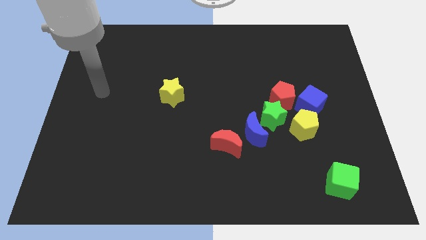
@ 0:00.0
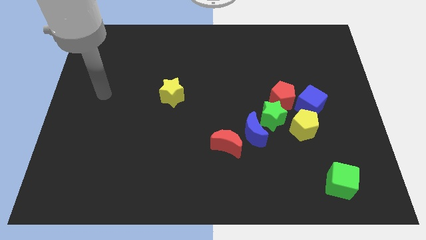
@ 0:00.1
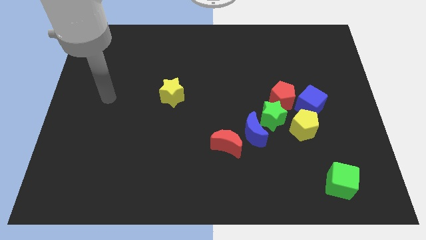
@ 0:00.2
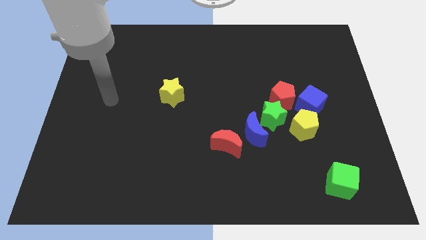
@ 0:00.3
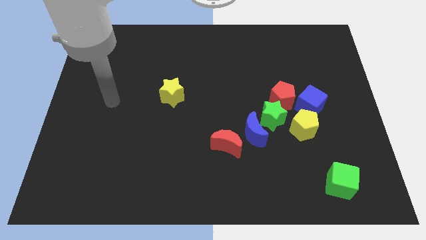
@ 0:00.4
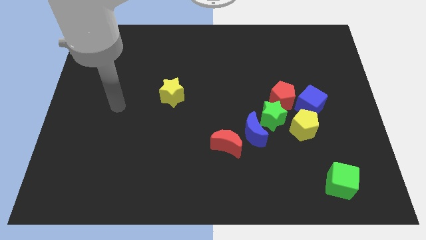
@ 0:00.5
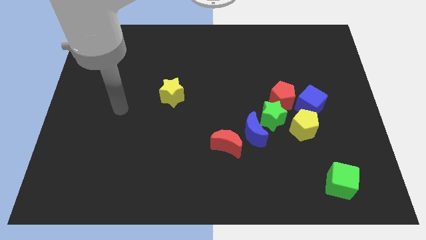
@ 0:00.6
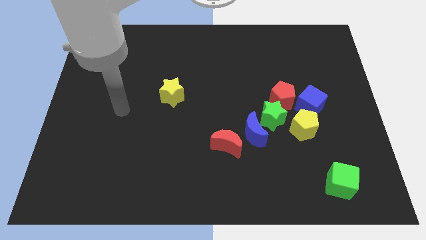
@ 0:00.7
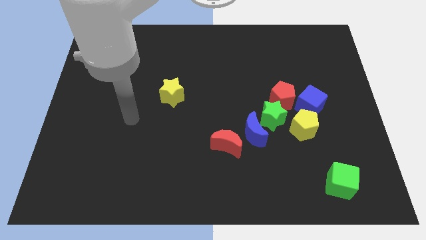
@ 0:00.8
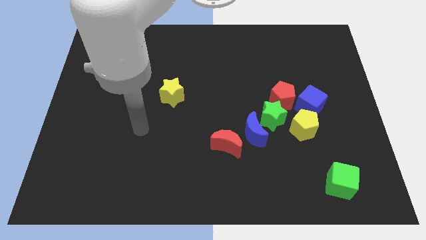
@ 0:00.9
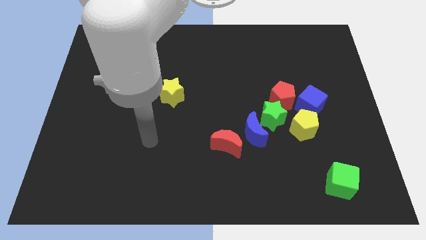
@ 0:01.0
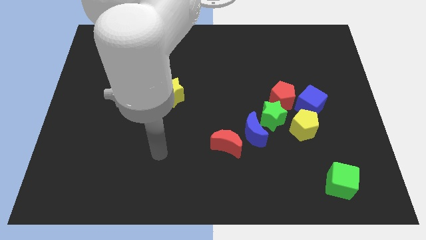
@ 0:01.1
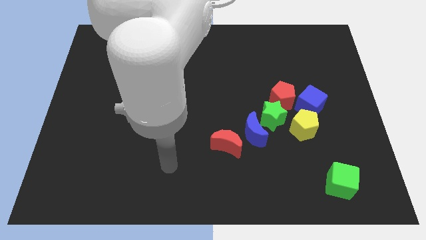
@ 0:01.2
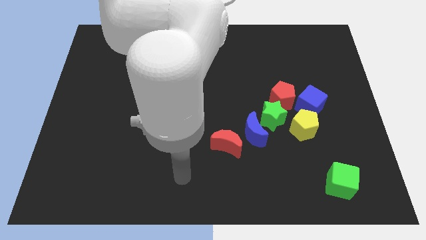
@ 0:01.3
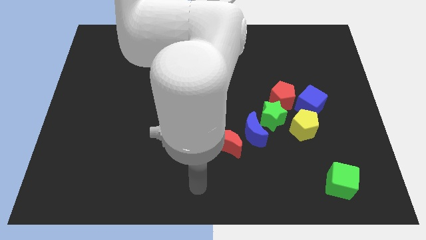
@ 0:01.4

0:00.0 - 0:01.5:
move your arm towards the red crescent

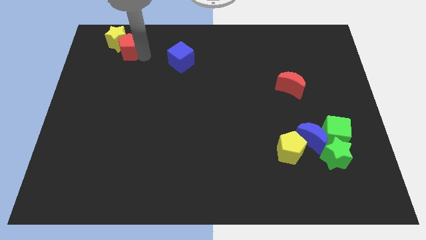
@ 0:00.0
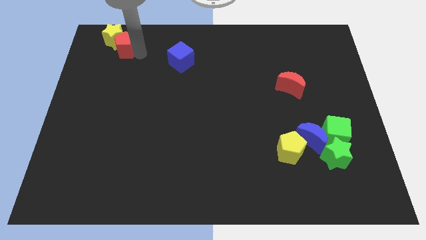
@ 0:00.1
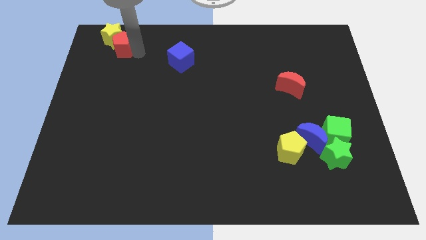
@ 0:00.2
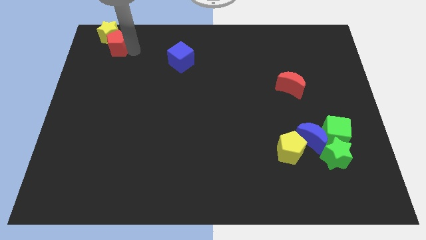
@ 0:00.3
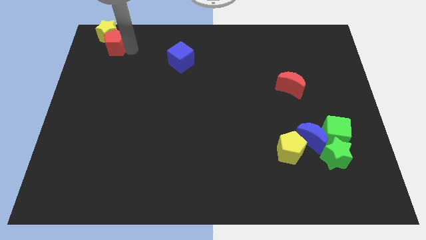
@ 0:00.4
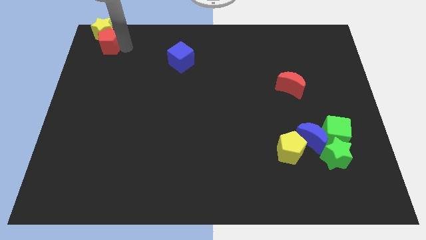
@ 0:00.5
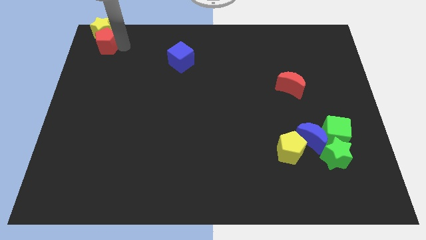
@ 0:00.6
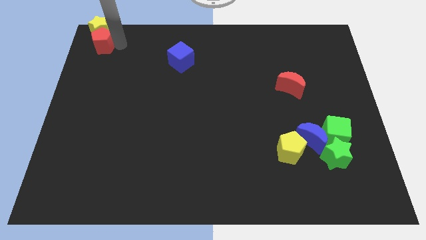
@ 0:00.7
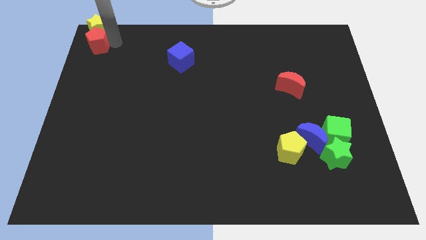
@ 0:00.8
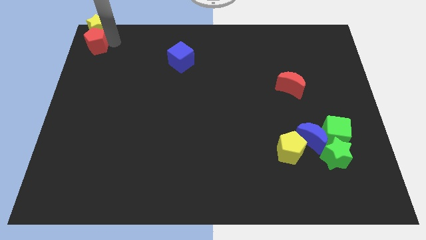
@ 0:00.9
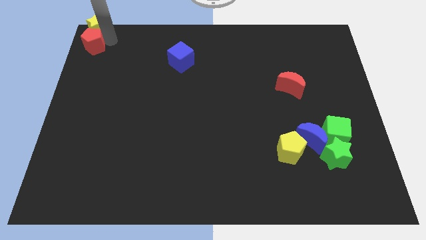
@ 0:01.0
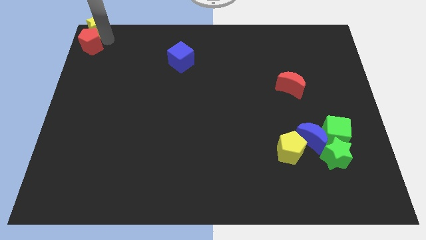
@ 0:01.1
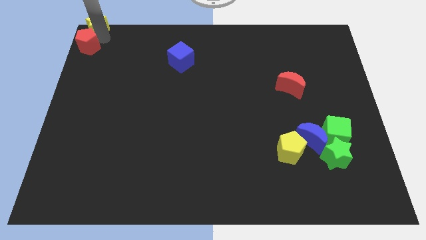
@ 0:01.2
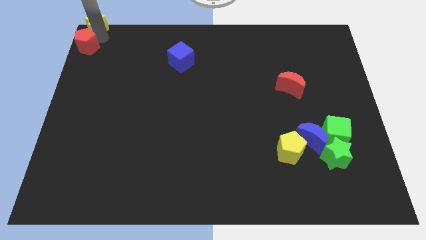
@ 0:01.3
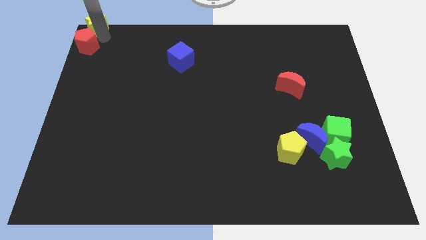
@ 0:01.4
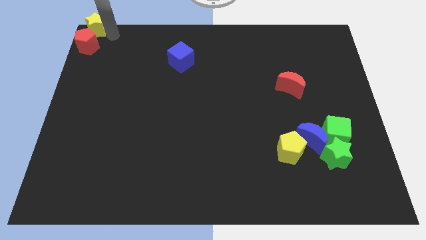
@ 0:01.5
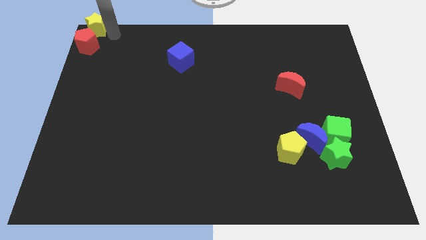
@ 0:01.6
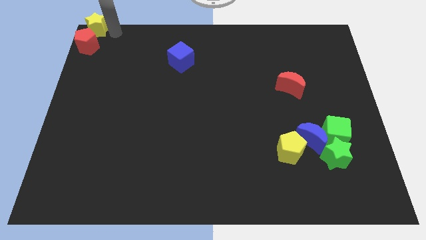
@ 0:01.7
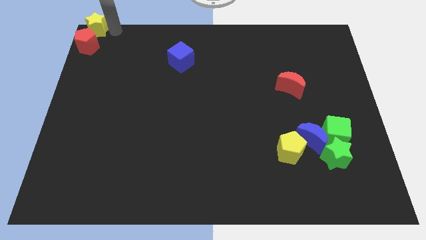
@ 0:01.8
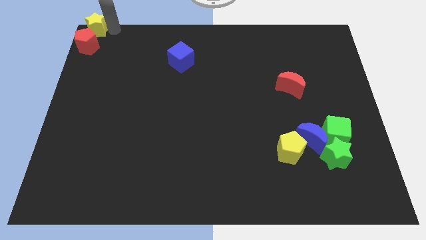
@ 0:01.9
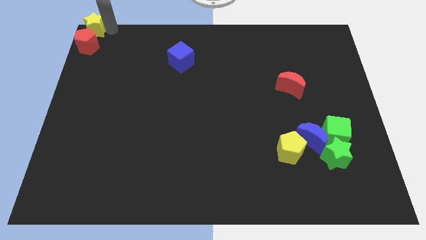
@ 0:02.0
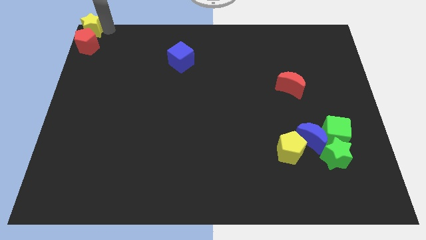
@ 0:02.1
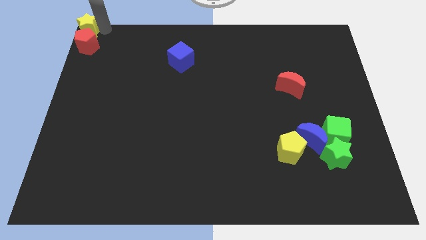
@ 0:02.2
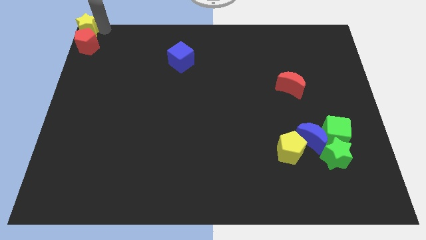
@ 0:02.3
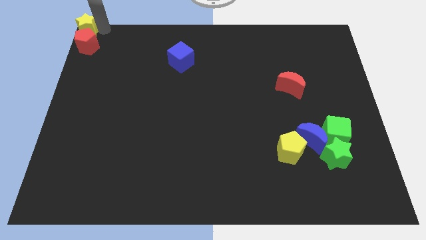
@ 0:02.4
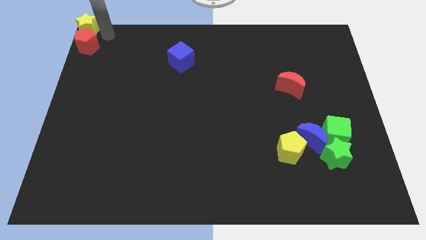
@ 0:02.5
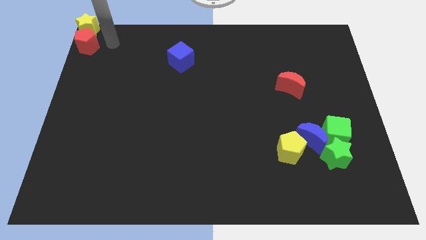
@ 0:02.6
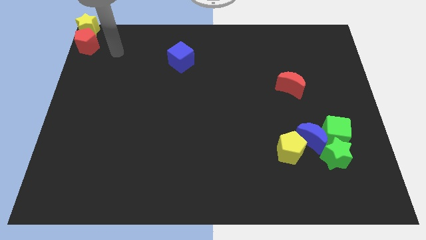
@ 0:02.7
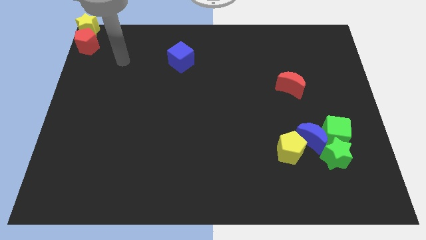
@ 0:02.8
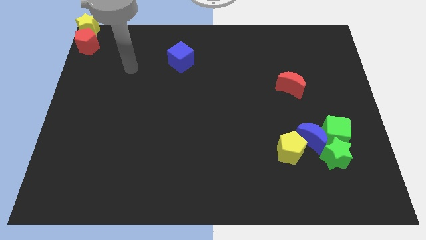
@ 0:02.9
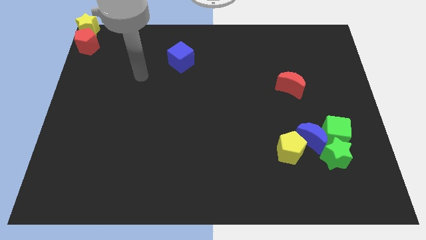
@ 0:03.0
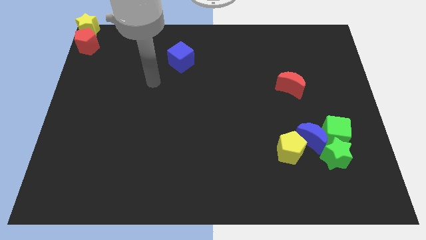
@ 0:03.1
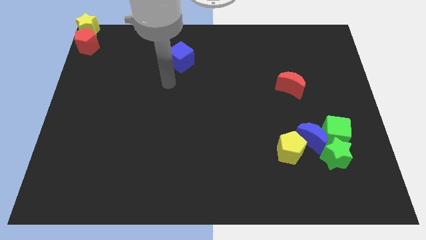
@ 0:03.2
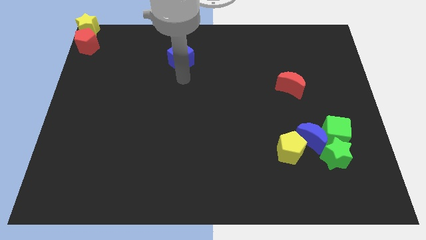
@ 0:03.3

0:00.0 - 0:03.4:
place the yellow star to the top left corner

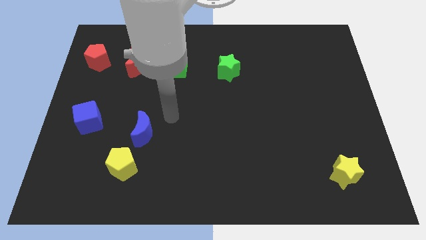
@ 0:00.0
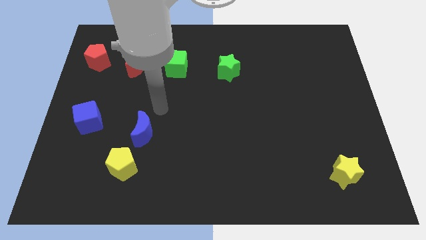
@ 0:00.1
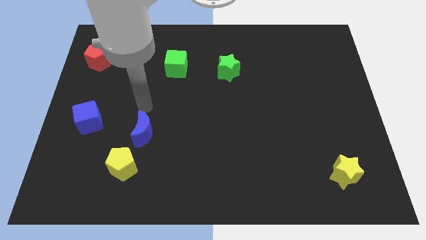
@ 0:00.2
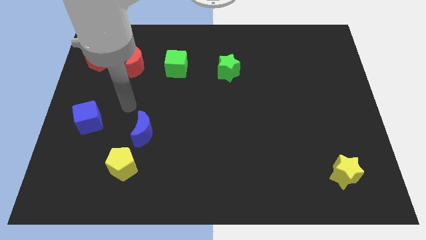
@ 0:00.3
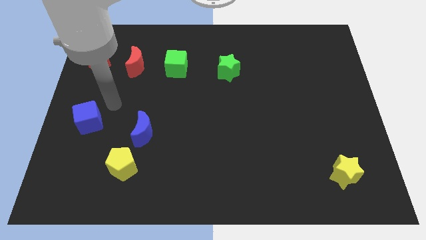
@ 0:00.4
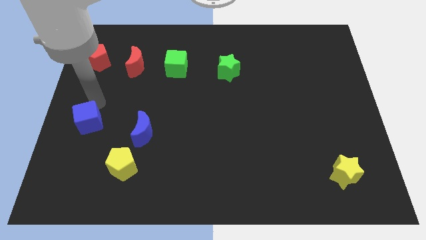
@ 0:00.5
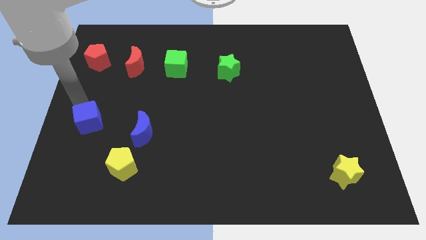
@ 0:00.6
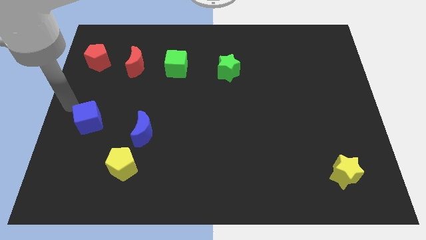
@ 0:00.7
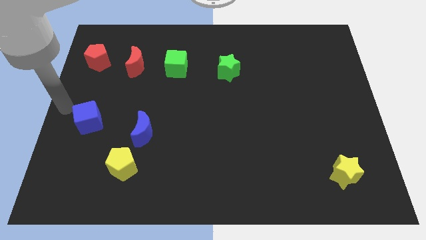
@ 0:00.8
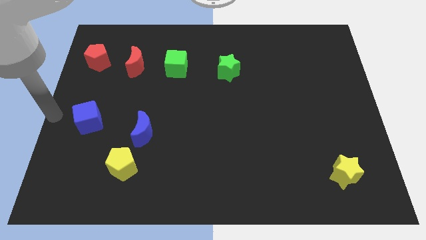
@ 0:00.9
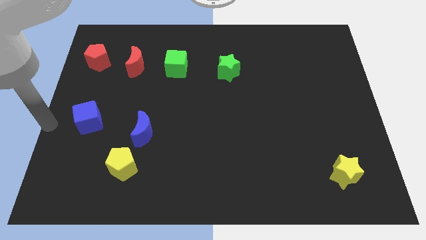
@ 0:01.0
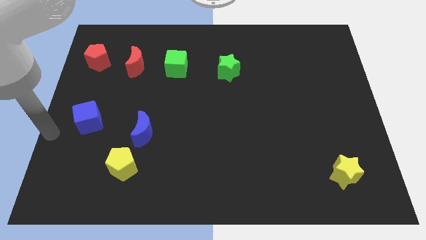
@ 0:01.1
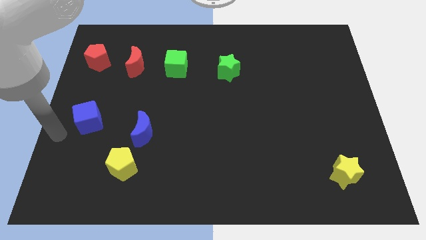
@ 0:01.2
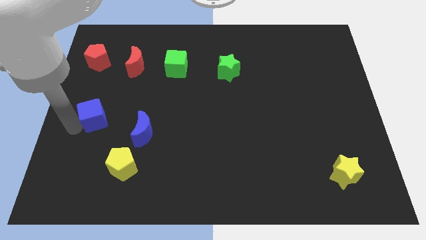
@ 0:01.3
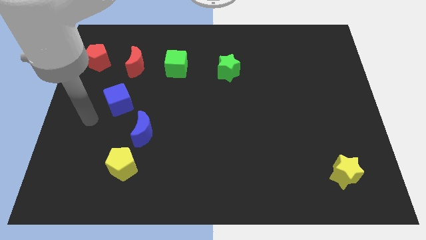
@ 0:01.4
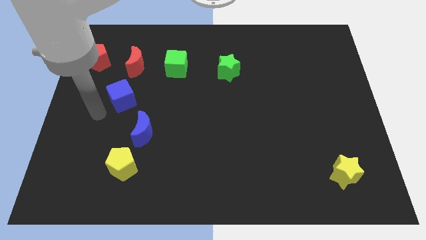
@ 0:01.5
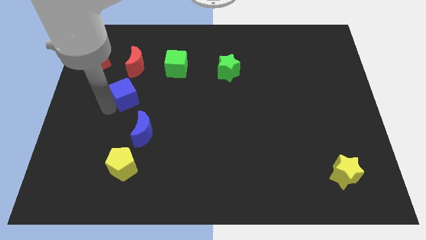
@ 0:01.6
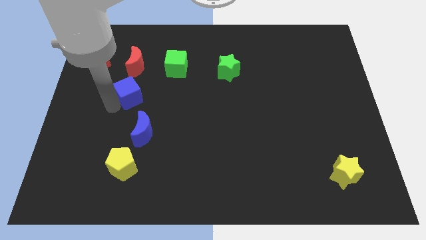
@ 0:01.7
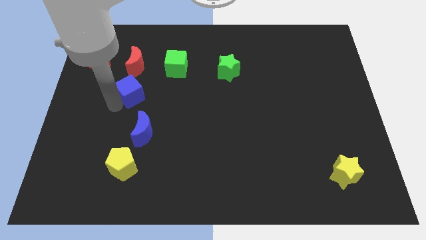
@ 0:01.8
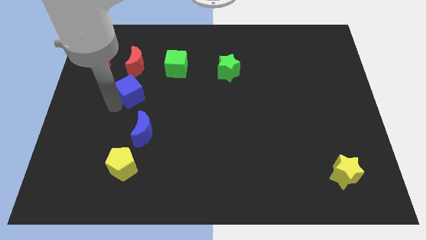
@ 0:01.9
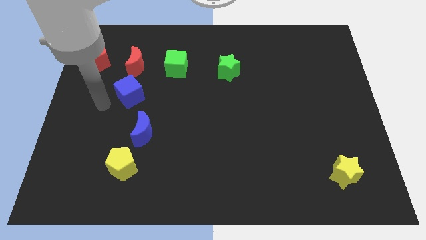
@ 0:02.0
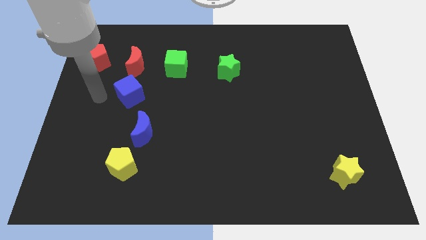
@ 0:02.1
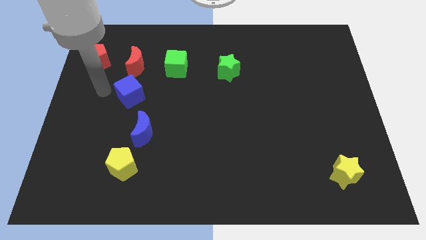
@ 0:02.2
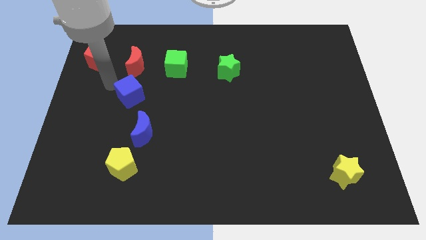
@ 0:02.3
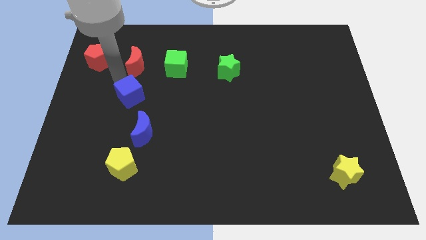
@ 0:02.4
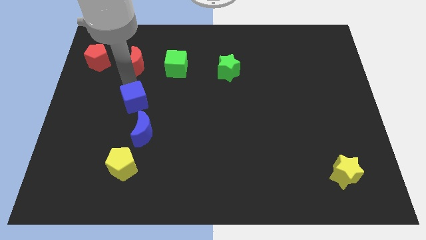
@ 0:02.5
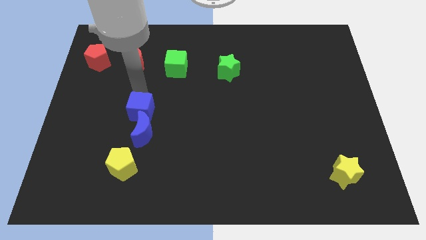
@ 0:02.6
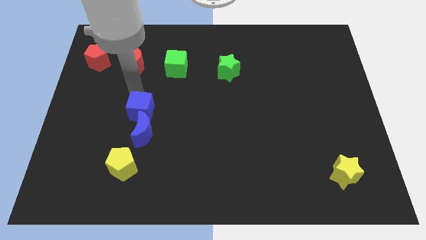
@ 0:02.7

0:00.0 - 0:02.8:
place blue cube above blue moon

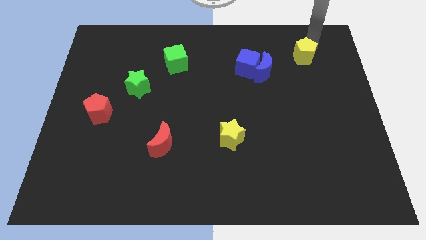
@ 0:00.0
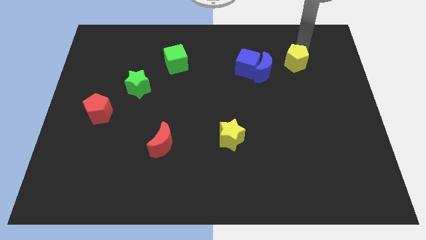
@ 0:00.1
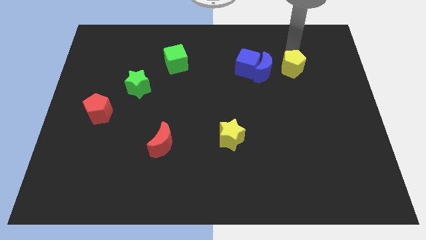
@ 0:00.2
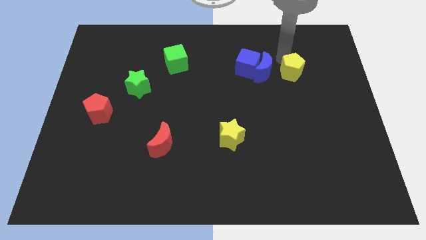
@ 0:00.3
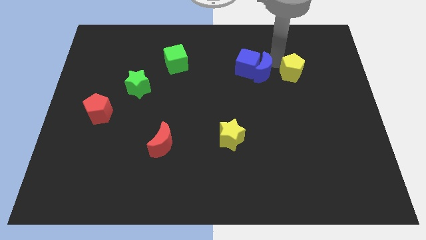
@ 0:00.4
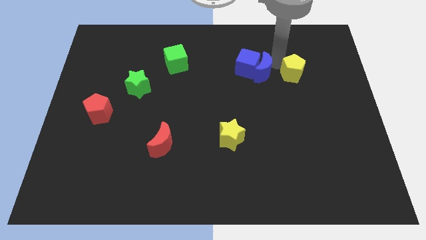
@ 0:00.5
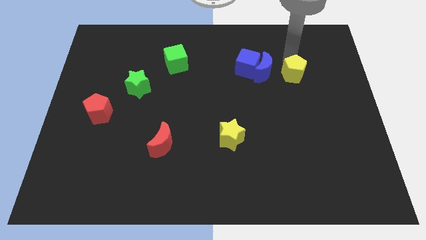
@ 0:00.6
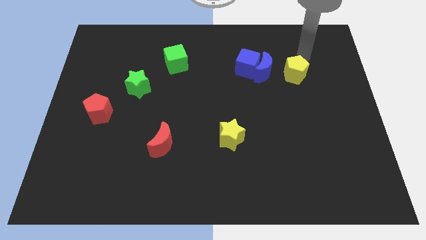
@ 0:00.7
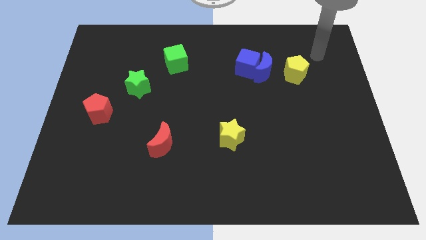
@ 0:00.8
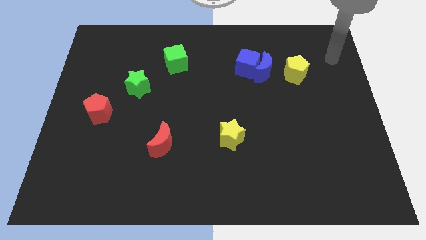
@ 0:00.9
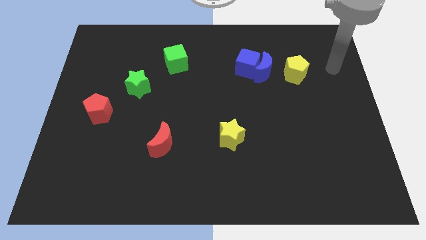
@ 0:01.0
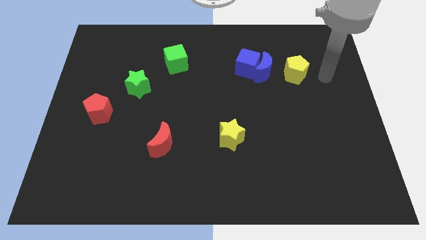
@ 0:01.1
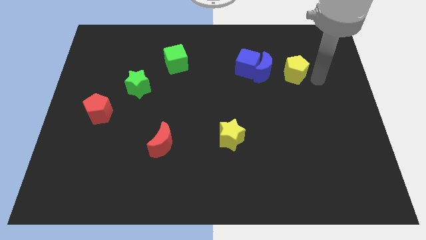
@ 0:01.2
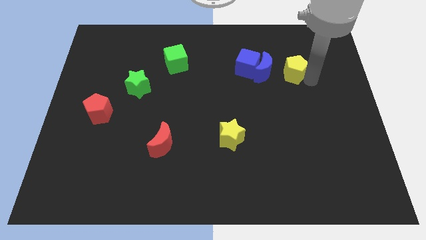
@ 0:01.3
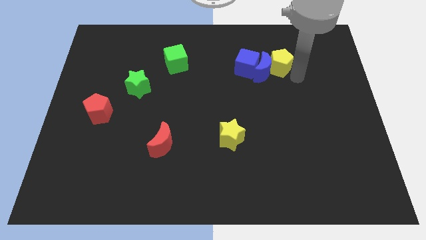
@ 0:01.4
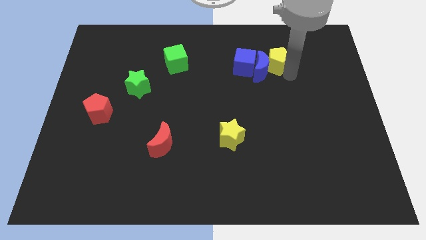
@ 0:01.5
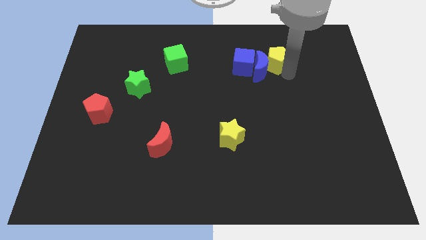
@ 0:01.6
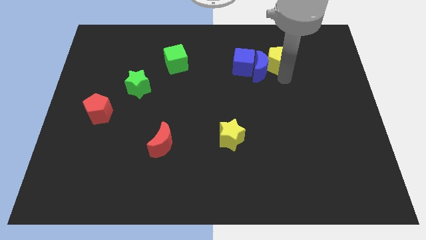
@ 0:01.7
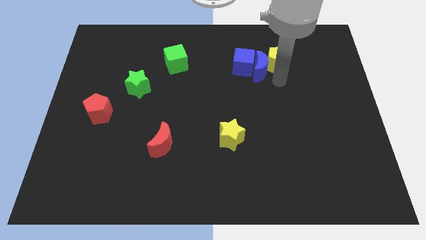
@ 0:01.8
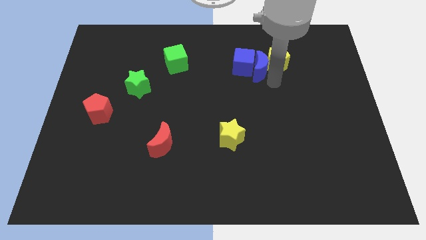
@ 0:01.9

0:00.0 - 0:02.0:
push the yellow pentagon into the blue moon
